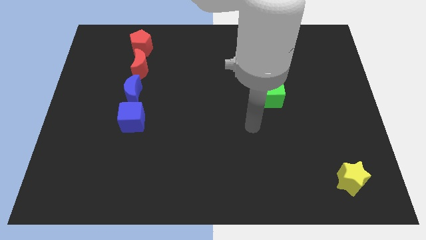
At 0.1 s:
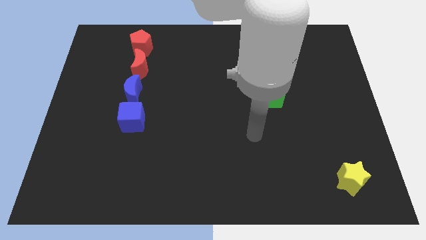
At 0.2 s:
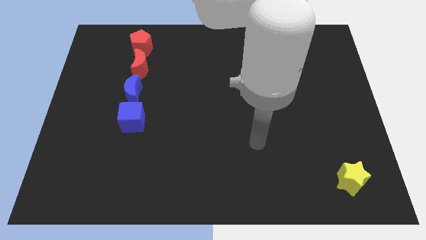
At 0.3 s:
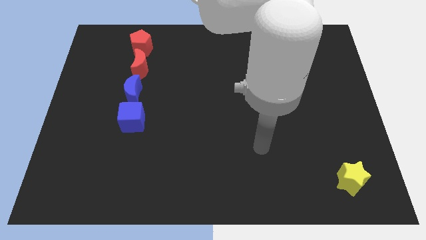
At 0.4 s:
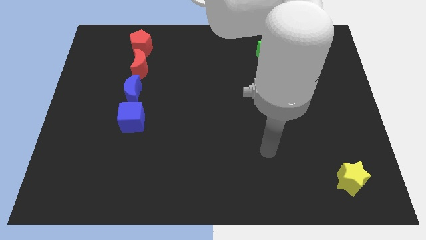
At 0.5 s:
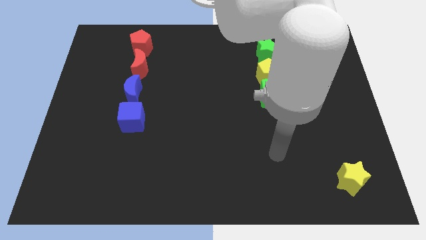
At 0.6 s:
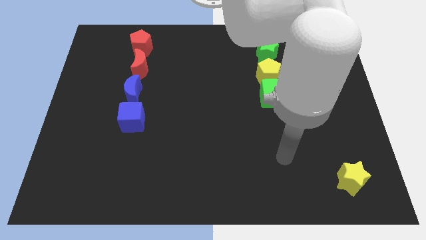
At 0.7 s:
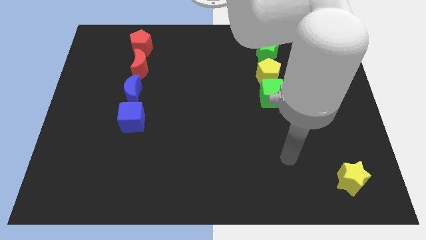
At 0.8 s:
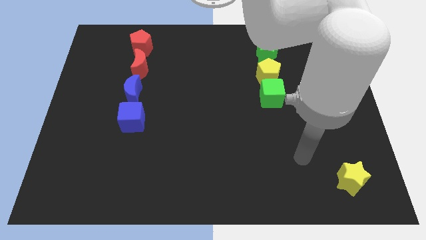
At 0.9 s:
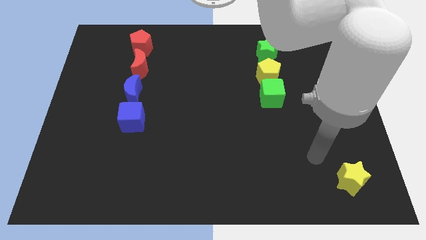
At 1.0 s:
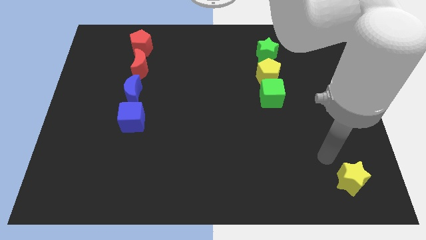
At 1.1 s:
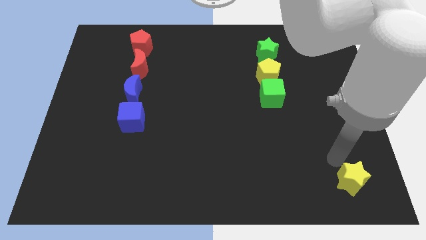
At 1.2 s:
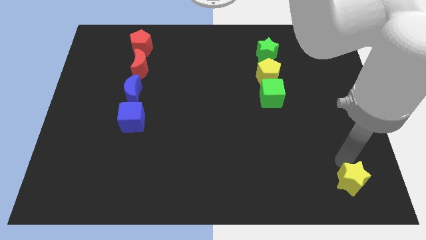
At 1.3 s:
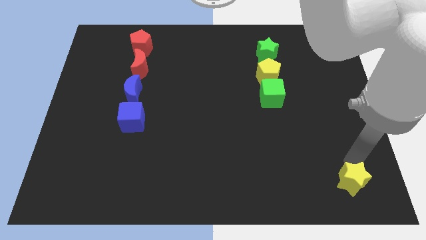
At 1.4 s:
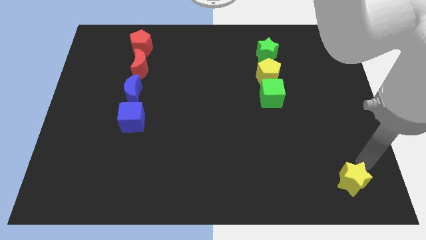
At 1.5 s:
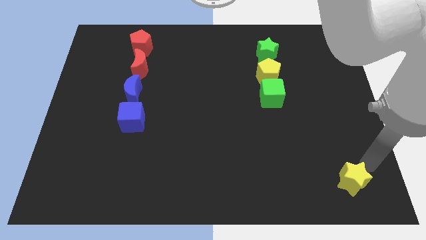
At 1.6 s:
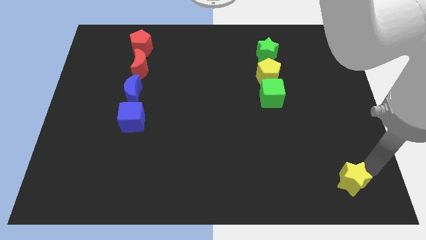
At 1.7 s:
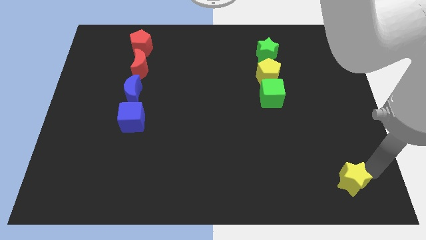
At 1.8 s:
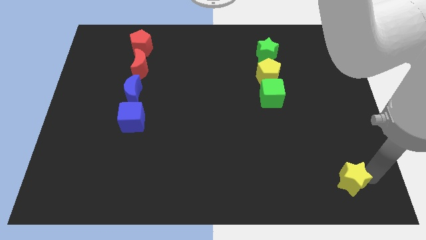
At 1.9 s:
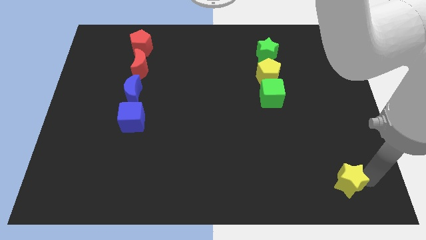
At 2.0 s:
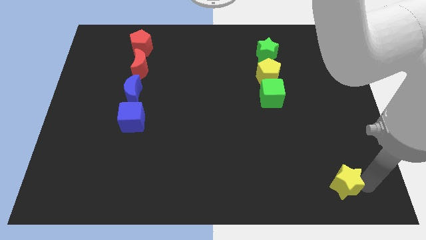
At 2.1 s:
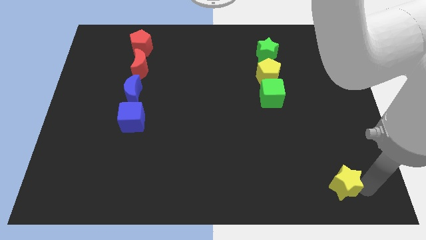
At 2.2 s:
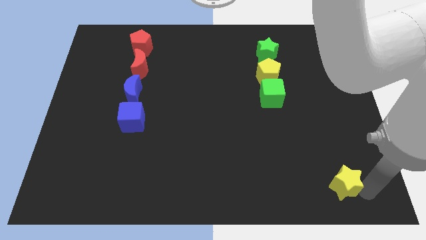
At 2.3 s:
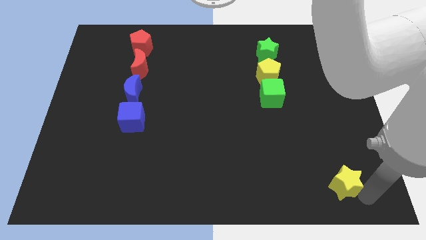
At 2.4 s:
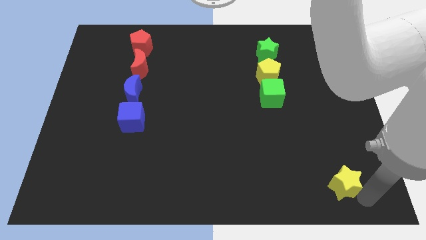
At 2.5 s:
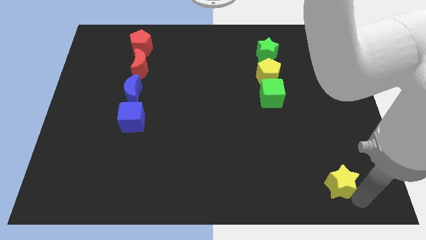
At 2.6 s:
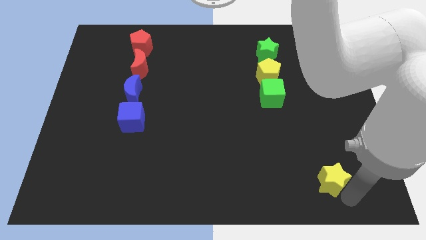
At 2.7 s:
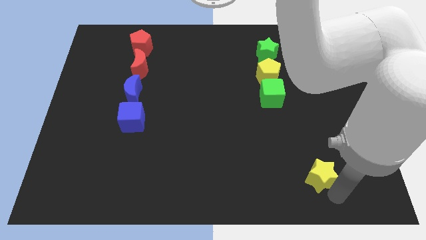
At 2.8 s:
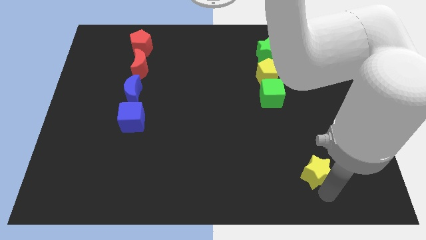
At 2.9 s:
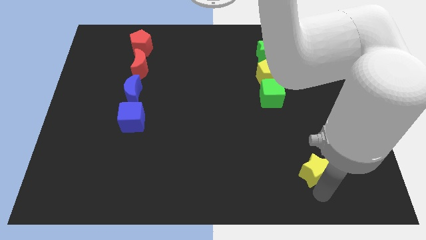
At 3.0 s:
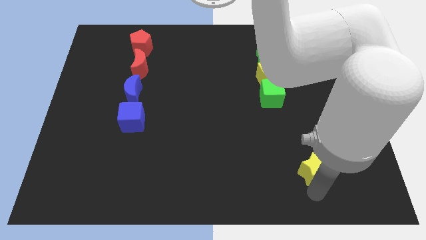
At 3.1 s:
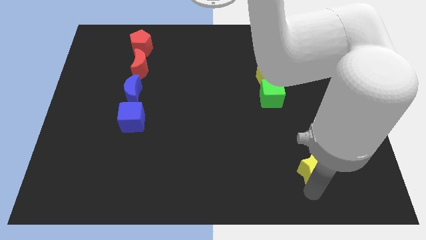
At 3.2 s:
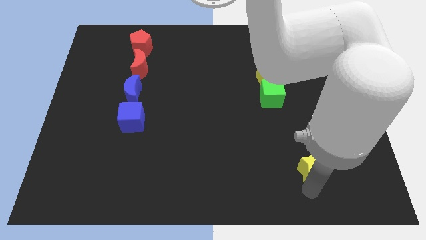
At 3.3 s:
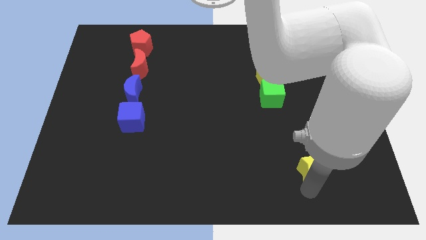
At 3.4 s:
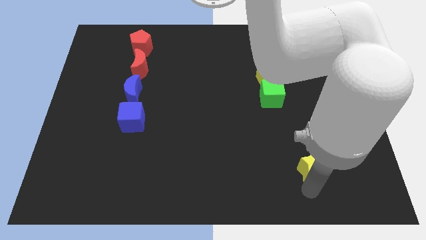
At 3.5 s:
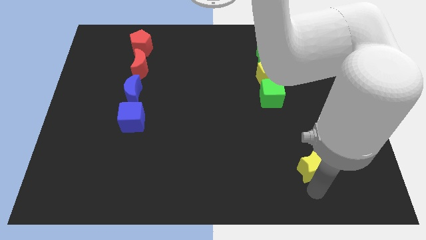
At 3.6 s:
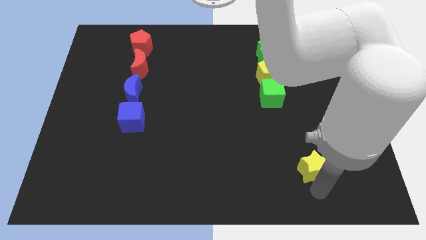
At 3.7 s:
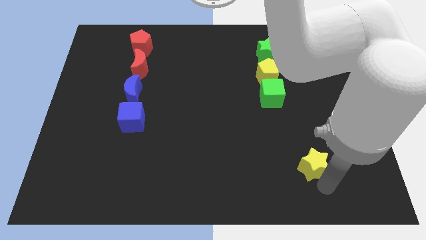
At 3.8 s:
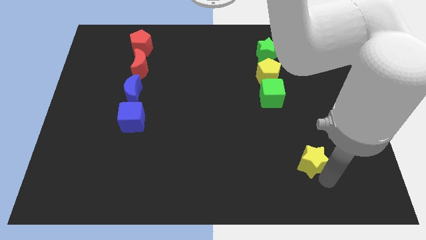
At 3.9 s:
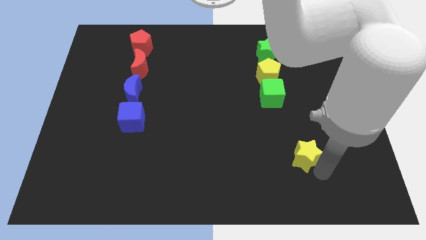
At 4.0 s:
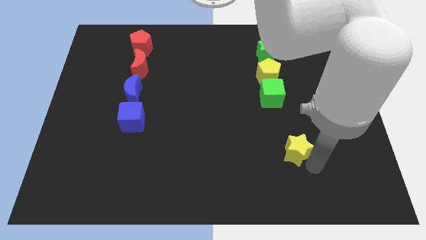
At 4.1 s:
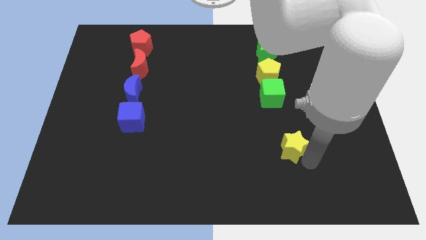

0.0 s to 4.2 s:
push the yellow star towards the green cube

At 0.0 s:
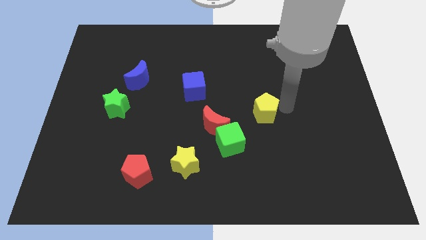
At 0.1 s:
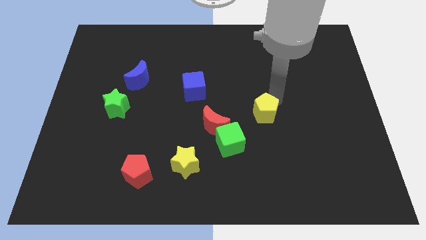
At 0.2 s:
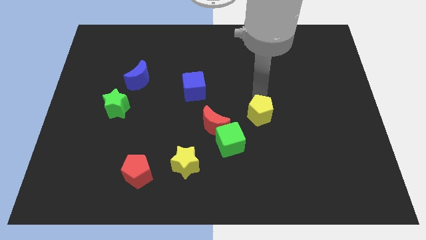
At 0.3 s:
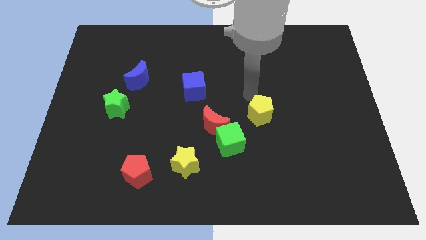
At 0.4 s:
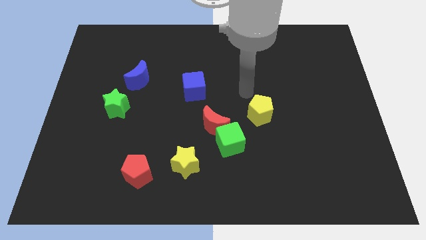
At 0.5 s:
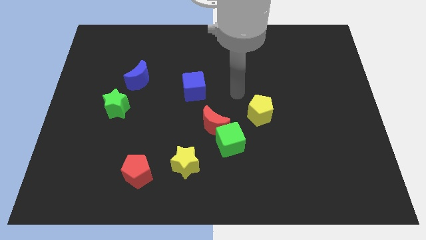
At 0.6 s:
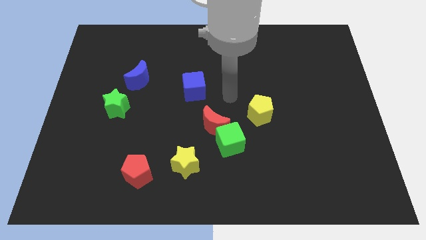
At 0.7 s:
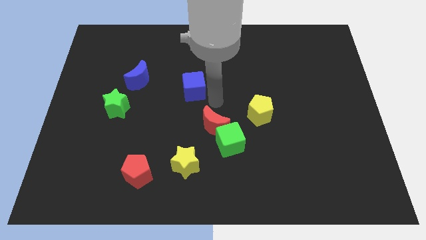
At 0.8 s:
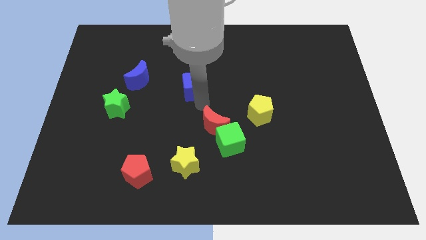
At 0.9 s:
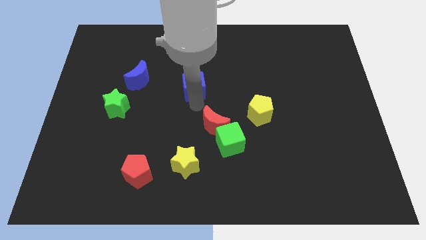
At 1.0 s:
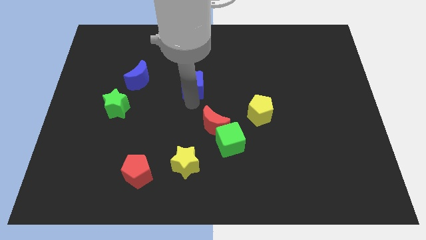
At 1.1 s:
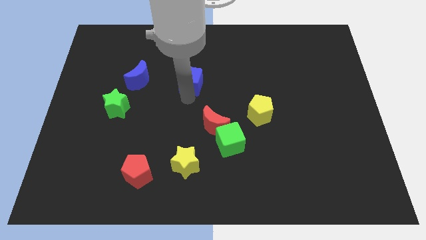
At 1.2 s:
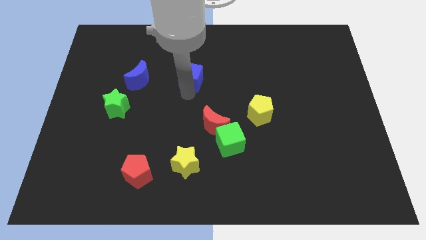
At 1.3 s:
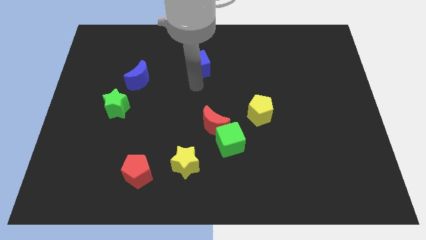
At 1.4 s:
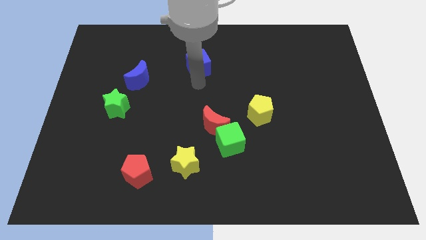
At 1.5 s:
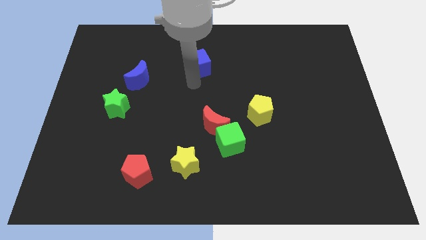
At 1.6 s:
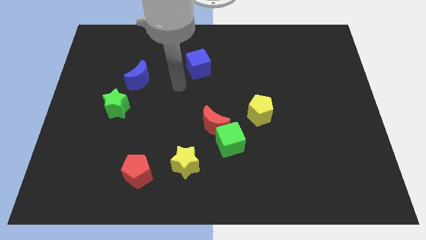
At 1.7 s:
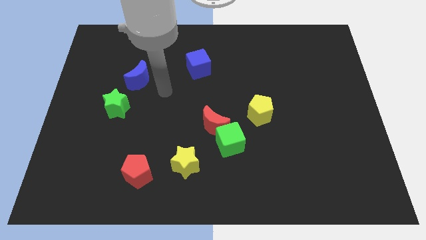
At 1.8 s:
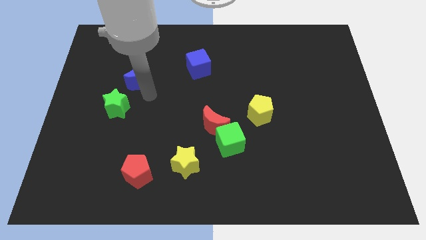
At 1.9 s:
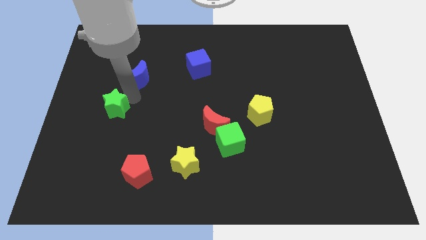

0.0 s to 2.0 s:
push the blue cube towards the top

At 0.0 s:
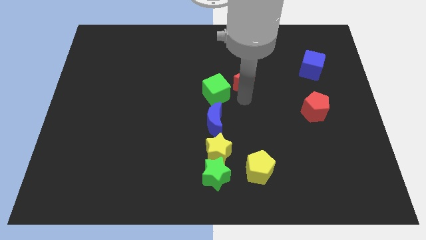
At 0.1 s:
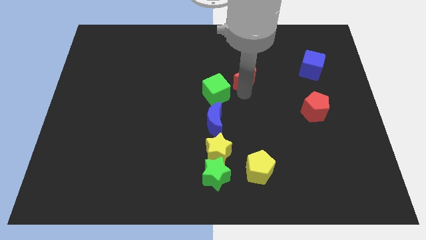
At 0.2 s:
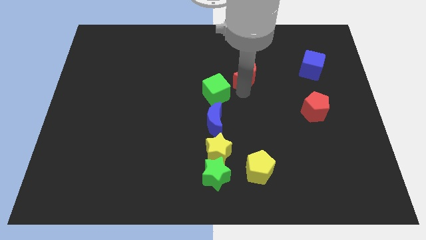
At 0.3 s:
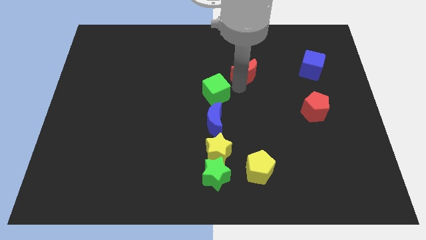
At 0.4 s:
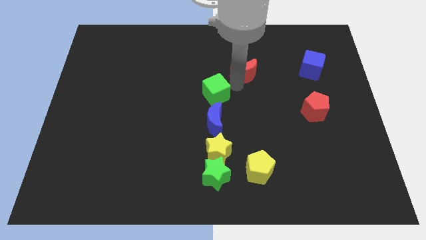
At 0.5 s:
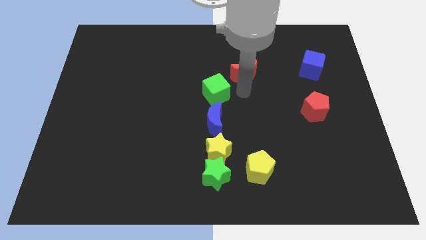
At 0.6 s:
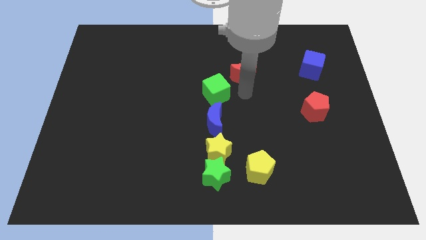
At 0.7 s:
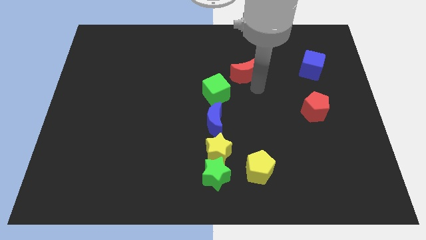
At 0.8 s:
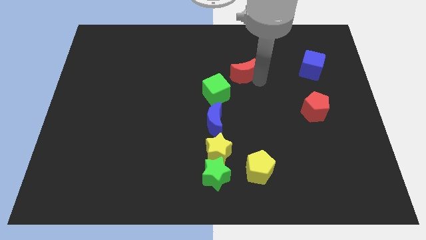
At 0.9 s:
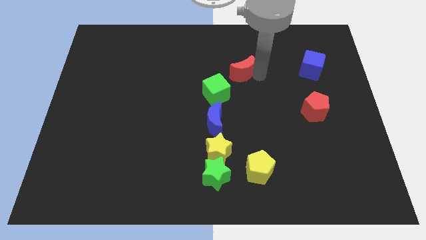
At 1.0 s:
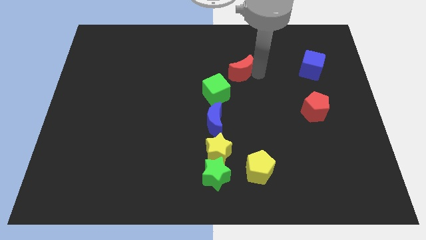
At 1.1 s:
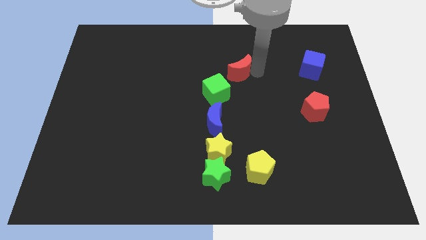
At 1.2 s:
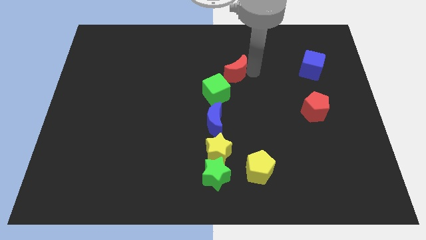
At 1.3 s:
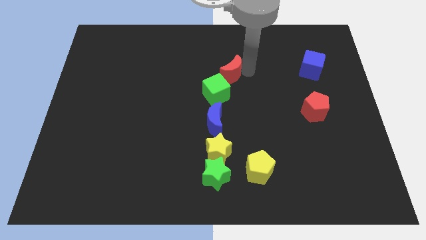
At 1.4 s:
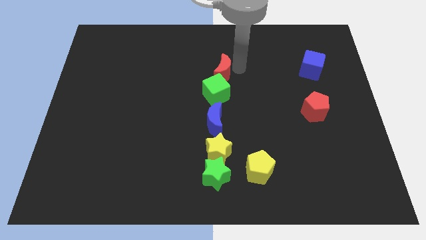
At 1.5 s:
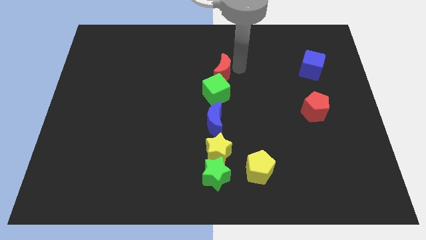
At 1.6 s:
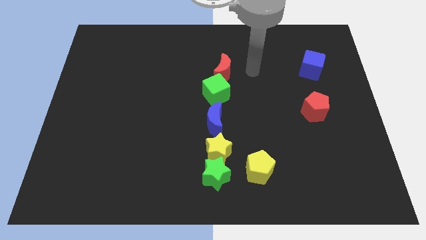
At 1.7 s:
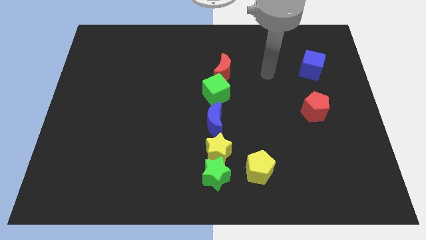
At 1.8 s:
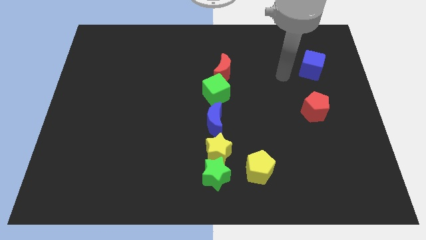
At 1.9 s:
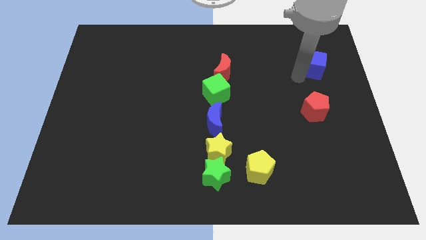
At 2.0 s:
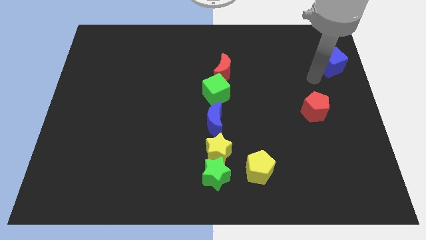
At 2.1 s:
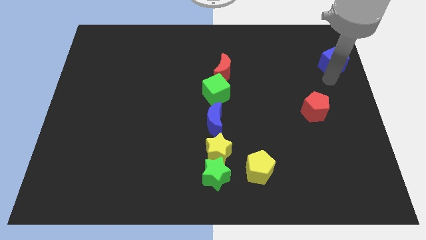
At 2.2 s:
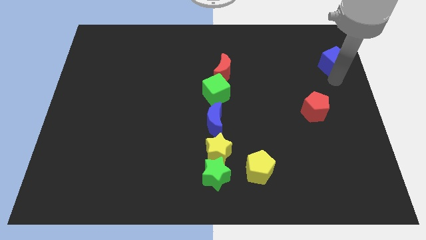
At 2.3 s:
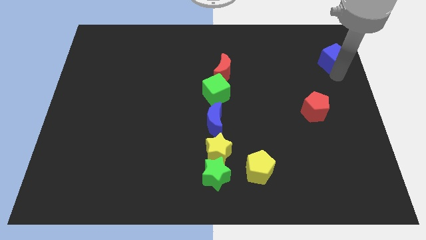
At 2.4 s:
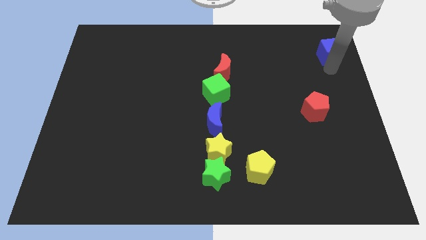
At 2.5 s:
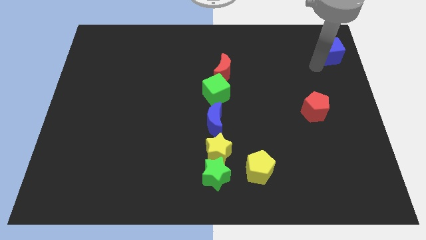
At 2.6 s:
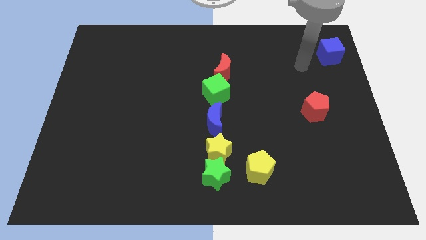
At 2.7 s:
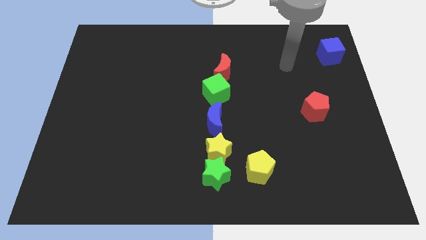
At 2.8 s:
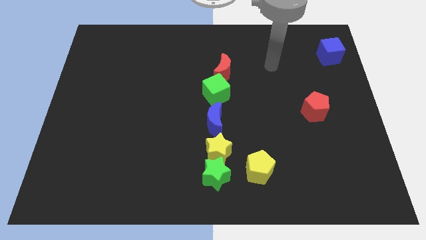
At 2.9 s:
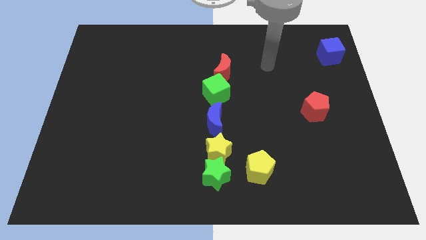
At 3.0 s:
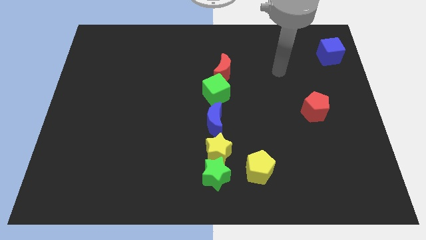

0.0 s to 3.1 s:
push the blue block towards the top right side
